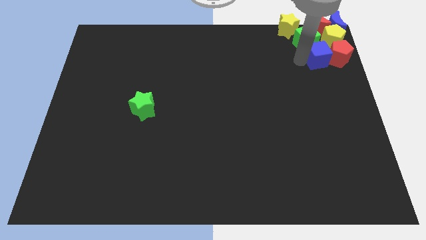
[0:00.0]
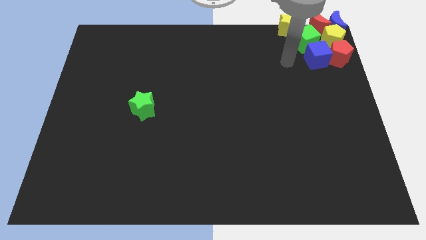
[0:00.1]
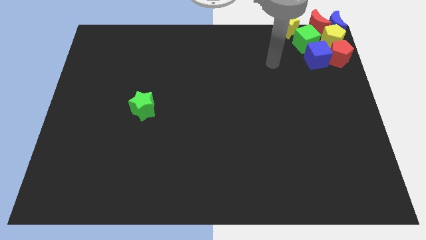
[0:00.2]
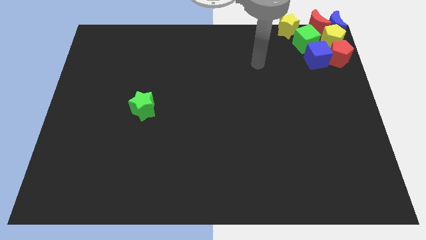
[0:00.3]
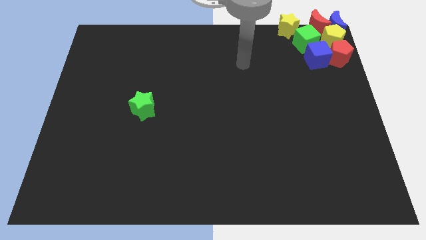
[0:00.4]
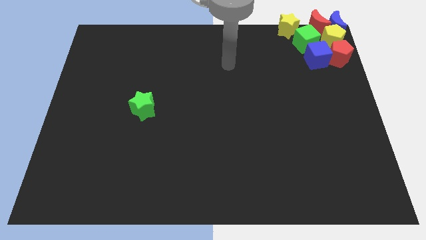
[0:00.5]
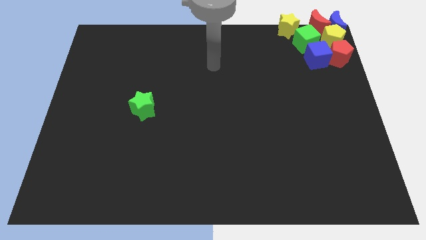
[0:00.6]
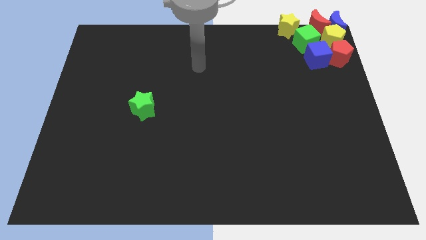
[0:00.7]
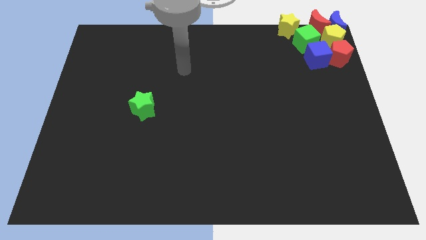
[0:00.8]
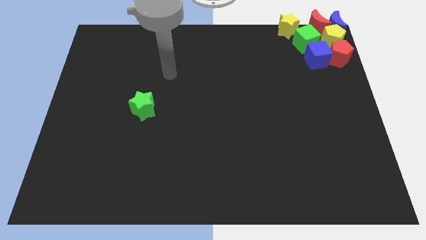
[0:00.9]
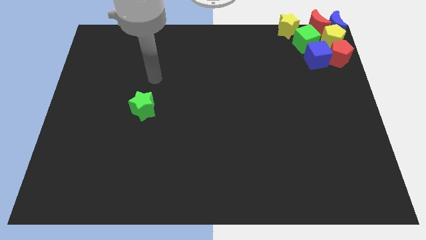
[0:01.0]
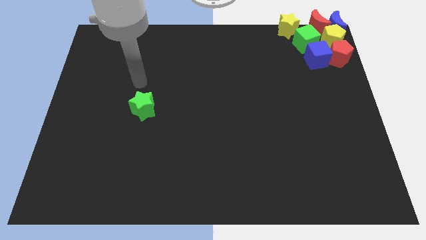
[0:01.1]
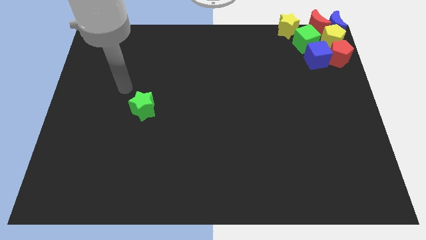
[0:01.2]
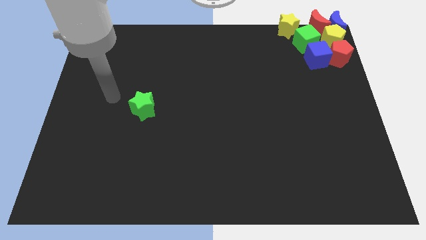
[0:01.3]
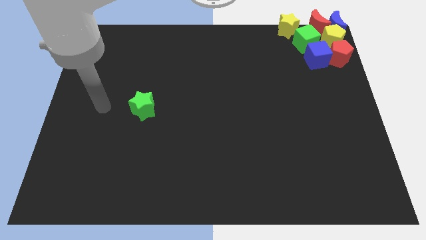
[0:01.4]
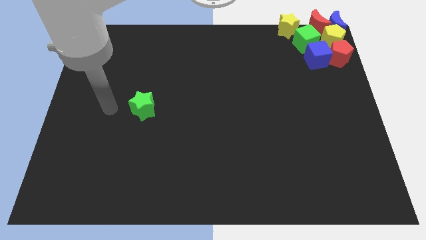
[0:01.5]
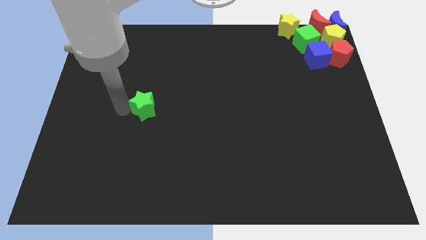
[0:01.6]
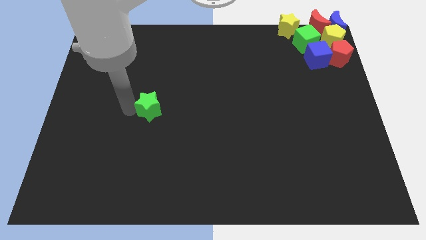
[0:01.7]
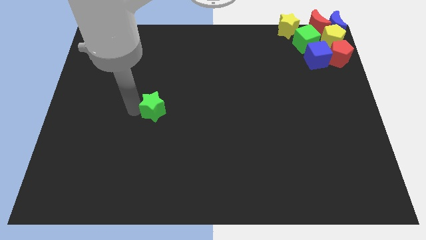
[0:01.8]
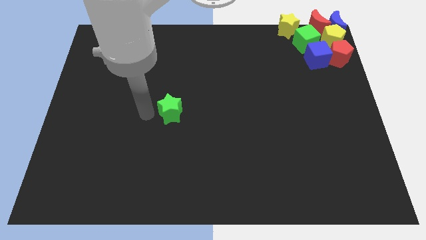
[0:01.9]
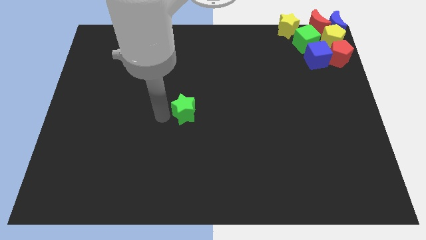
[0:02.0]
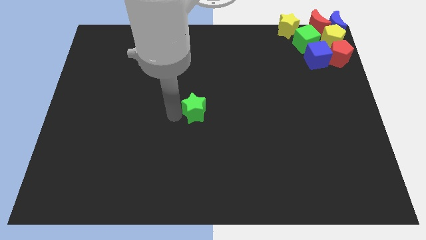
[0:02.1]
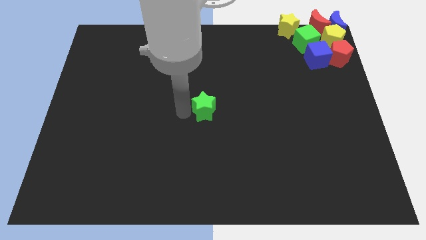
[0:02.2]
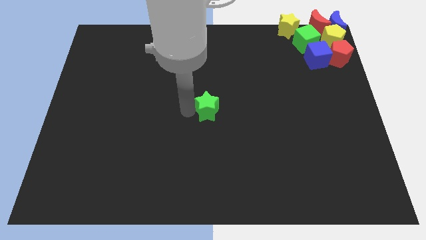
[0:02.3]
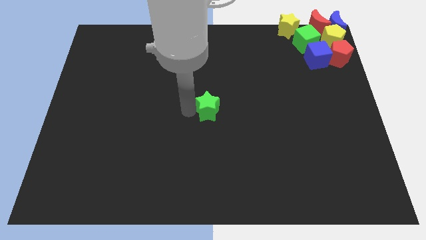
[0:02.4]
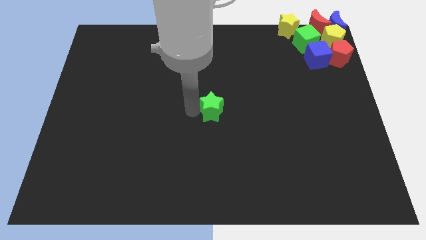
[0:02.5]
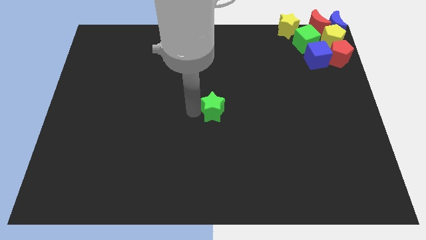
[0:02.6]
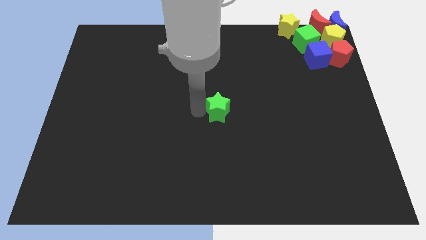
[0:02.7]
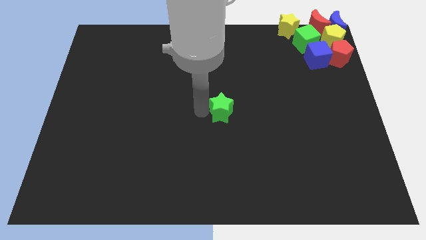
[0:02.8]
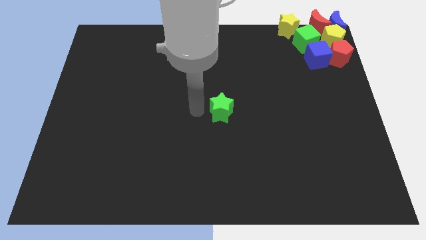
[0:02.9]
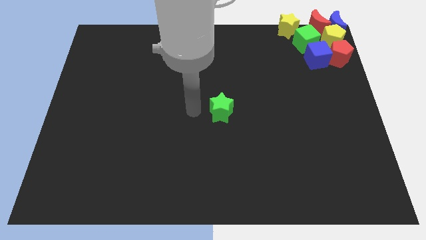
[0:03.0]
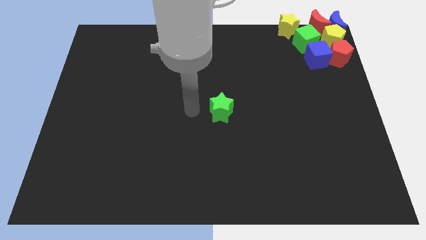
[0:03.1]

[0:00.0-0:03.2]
slide the green star to the center of the board

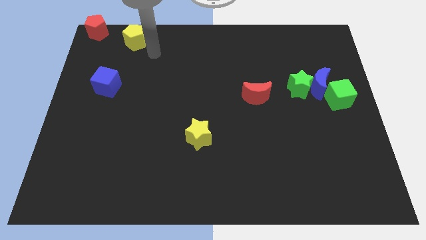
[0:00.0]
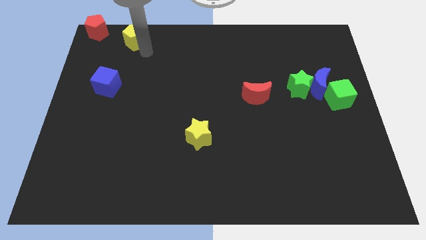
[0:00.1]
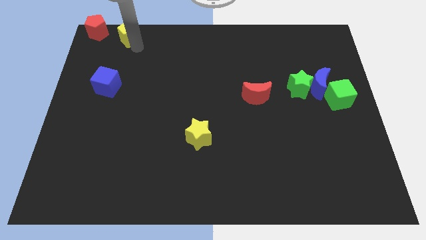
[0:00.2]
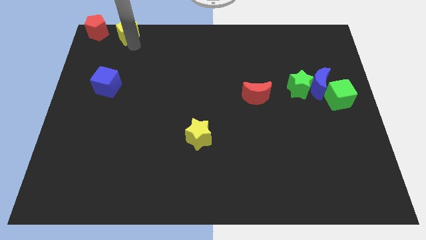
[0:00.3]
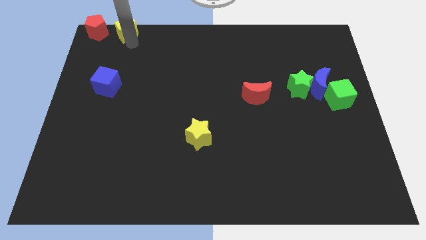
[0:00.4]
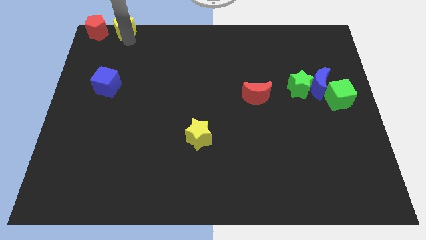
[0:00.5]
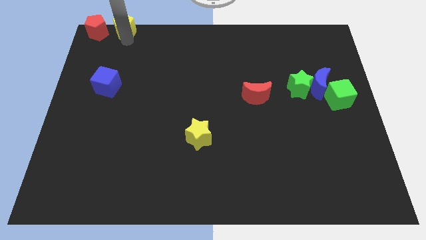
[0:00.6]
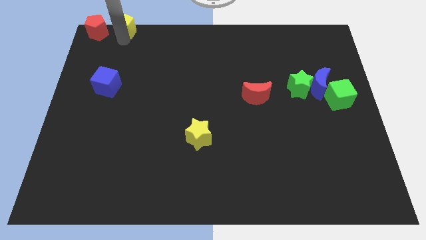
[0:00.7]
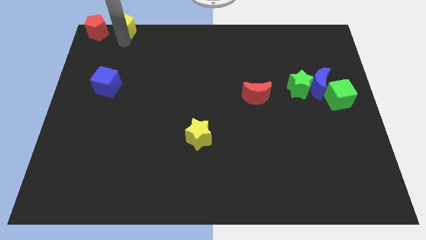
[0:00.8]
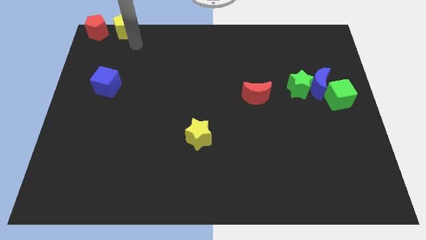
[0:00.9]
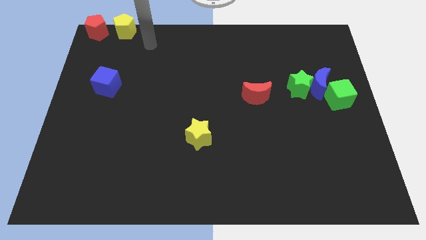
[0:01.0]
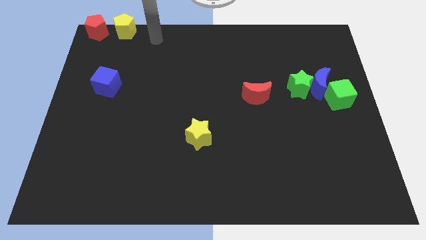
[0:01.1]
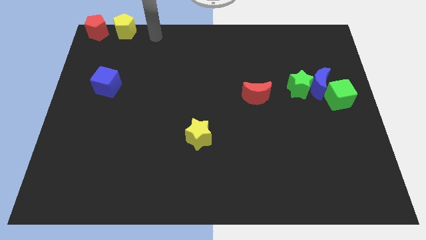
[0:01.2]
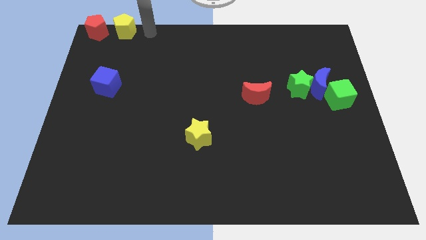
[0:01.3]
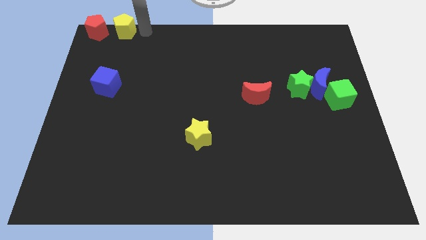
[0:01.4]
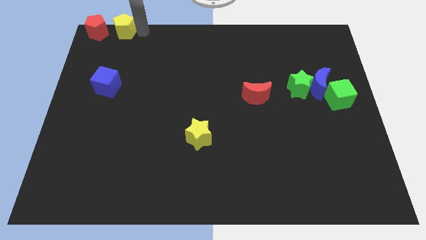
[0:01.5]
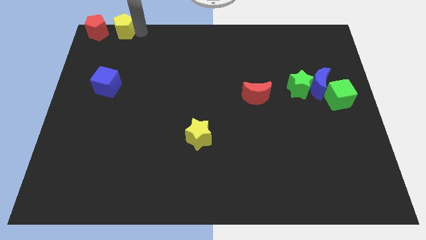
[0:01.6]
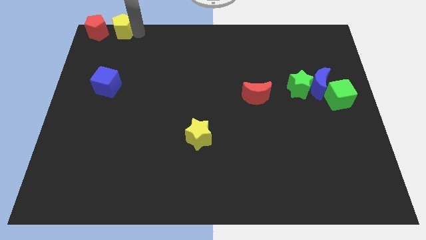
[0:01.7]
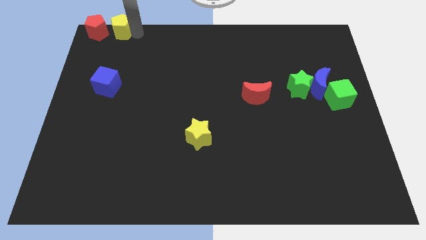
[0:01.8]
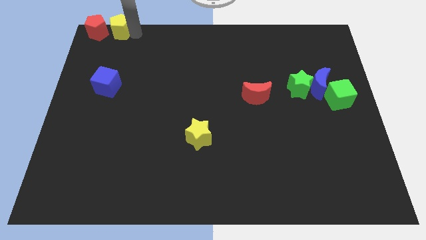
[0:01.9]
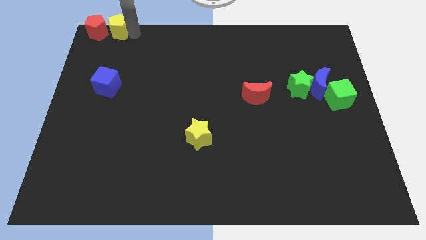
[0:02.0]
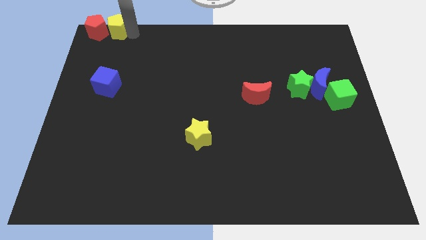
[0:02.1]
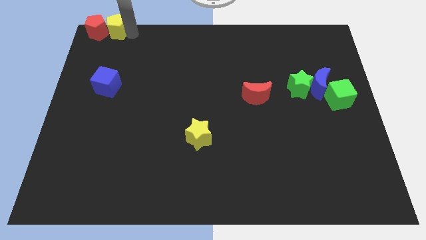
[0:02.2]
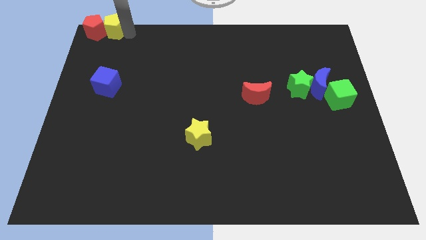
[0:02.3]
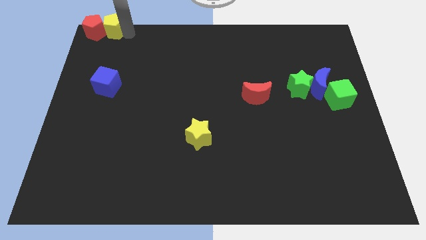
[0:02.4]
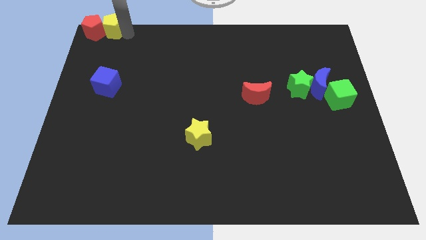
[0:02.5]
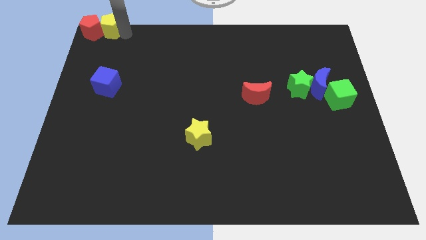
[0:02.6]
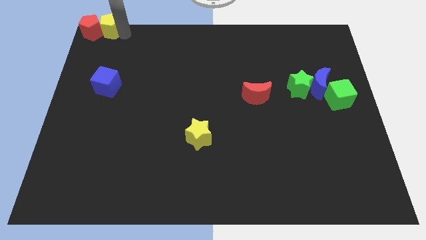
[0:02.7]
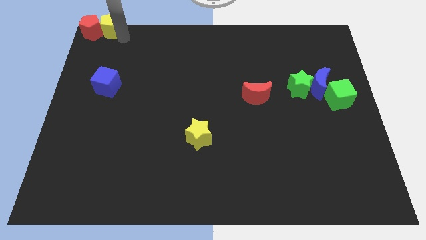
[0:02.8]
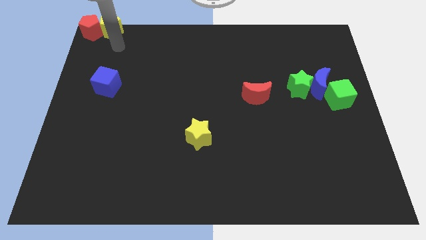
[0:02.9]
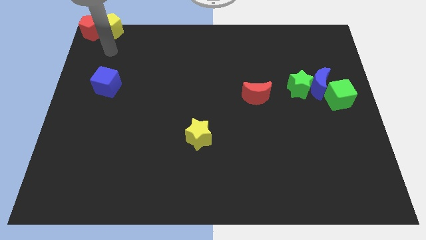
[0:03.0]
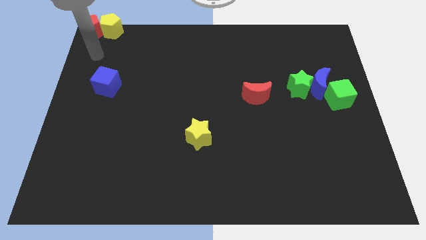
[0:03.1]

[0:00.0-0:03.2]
push the yellow pentagon into the red pentagon

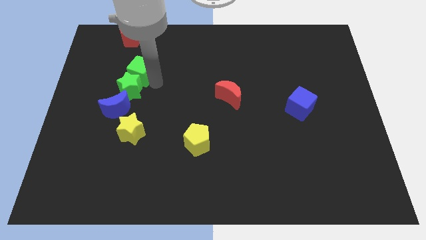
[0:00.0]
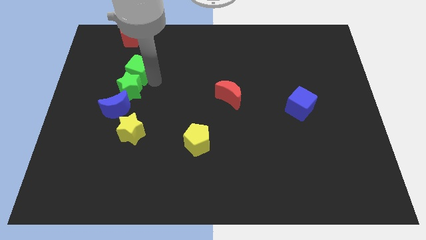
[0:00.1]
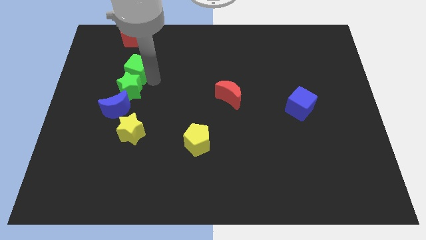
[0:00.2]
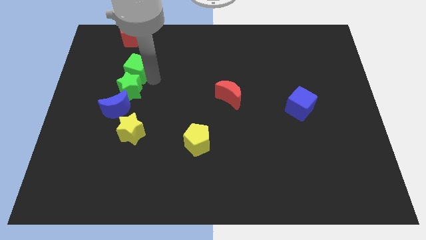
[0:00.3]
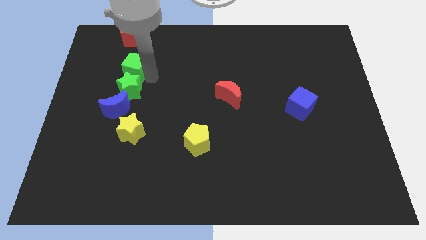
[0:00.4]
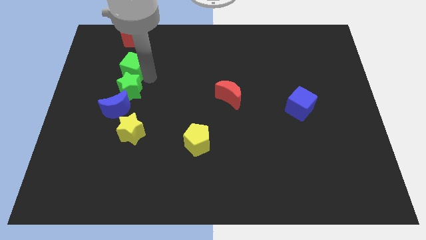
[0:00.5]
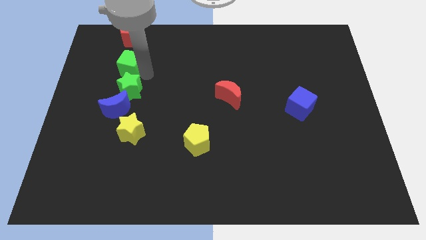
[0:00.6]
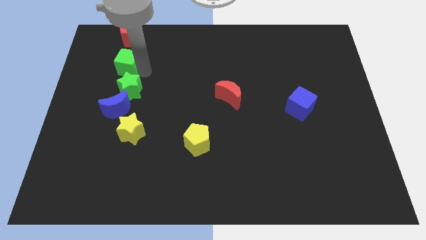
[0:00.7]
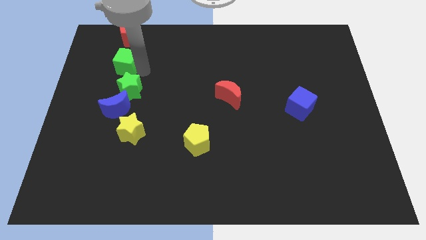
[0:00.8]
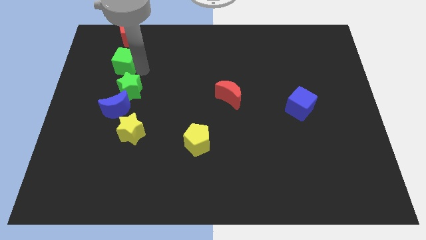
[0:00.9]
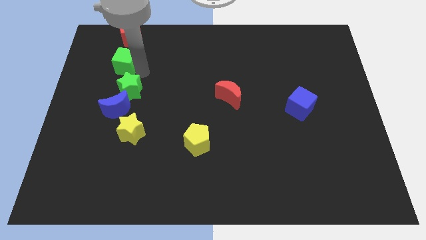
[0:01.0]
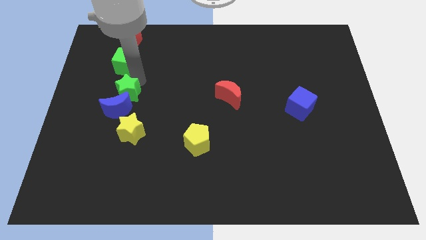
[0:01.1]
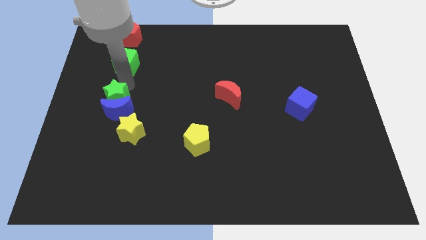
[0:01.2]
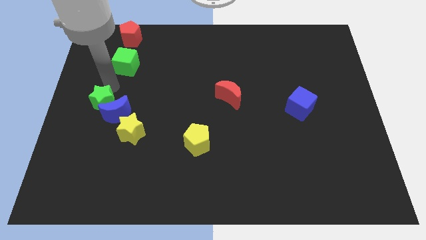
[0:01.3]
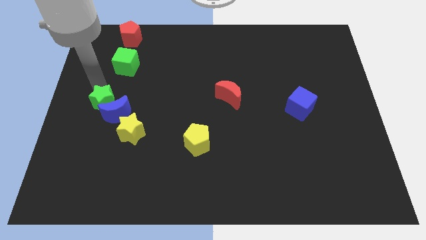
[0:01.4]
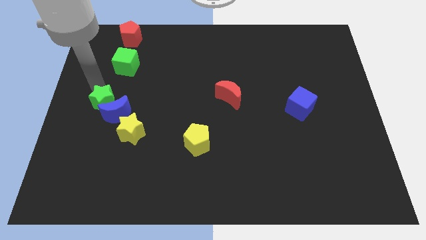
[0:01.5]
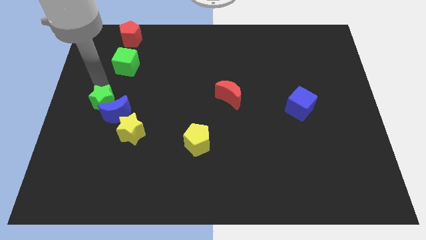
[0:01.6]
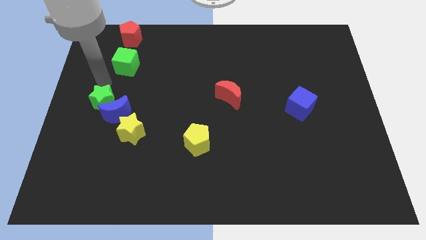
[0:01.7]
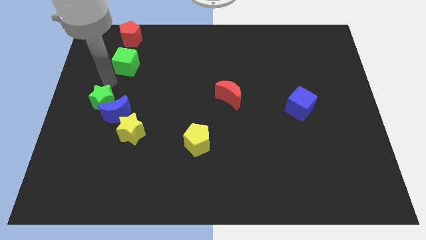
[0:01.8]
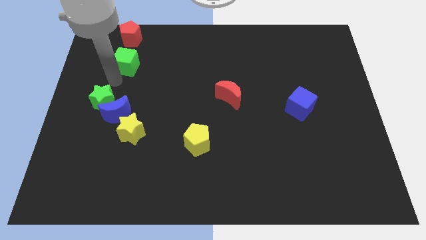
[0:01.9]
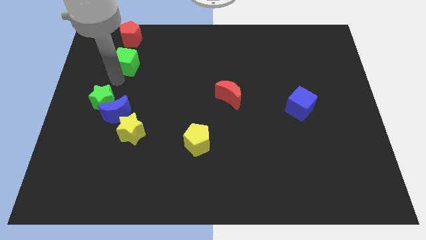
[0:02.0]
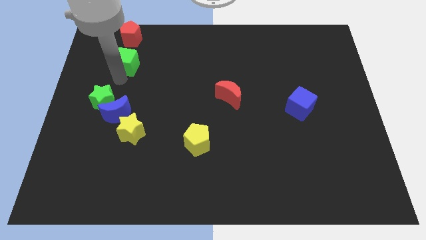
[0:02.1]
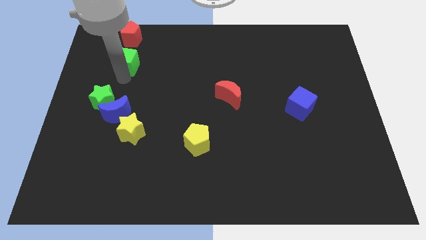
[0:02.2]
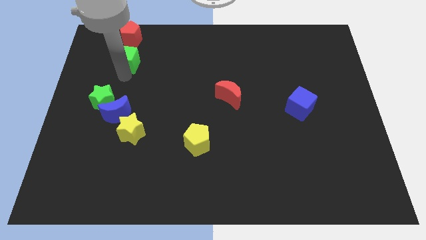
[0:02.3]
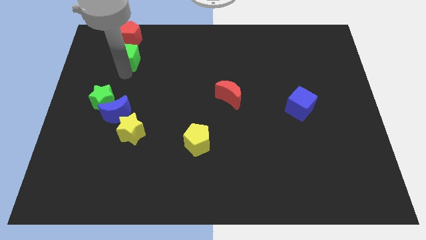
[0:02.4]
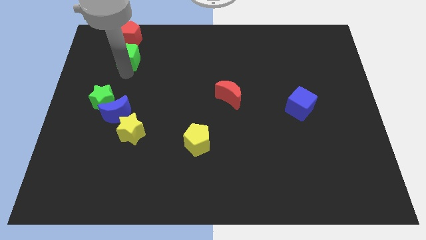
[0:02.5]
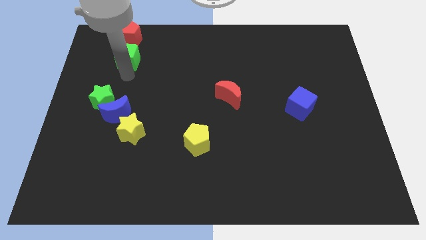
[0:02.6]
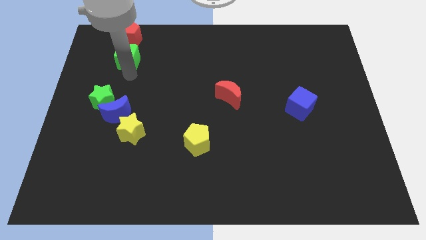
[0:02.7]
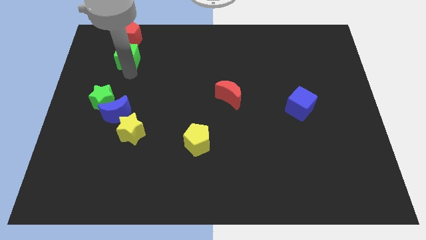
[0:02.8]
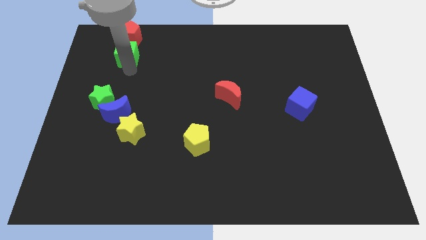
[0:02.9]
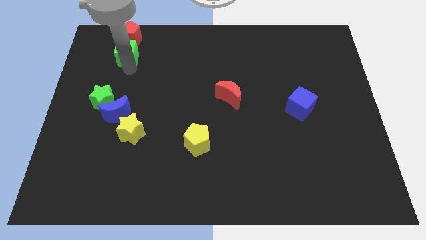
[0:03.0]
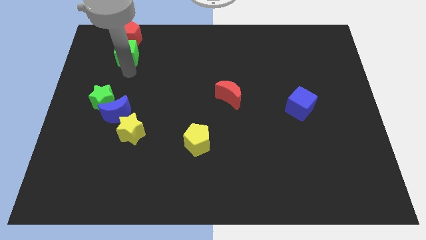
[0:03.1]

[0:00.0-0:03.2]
place green cube below the red pentagon
